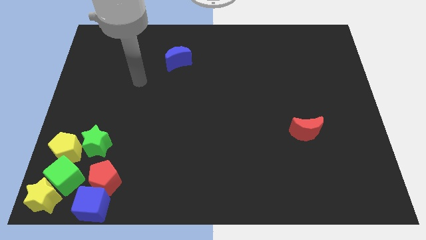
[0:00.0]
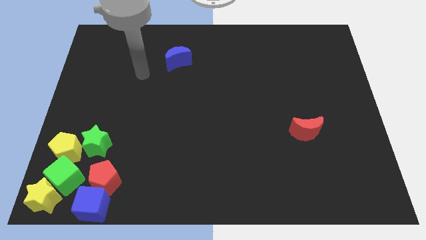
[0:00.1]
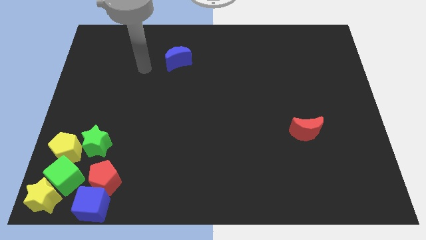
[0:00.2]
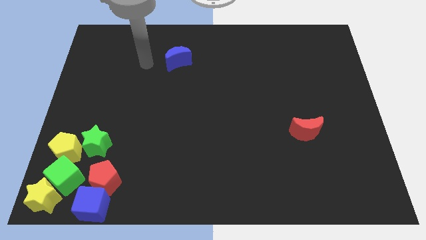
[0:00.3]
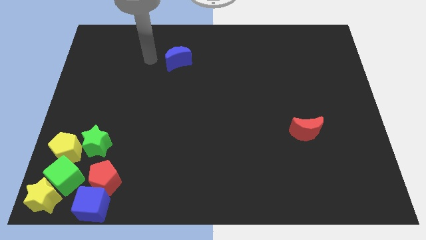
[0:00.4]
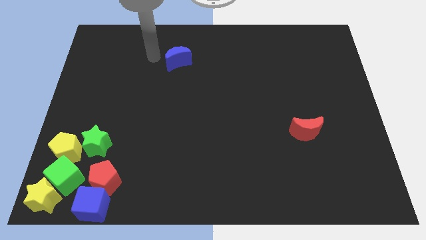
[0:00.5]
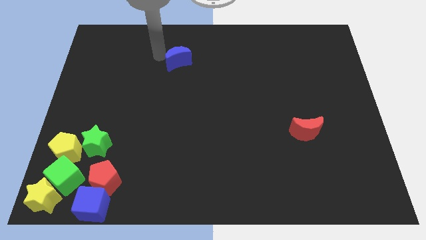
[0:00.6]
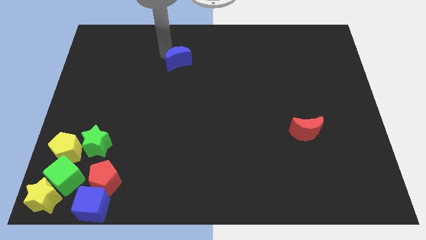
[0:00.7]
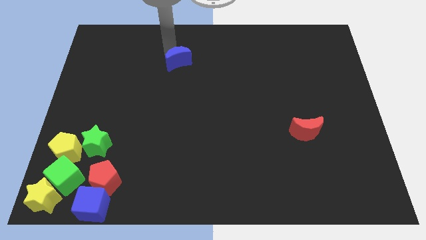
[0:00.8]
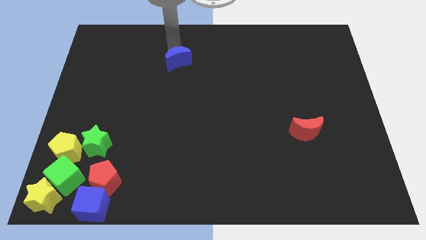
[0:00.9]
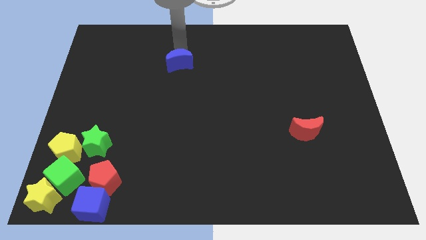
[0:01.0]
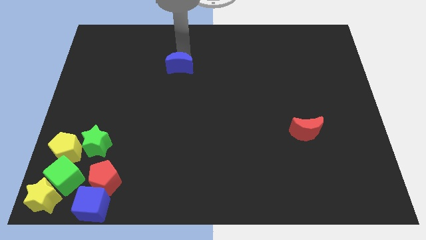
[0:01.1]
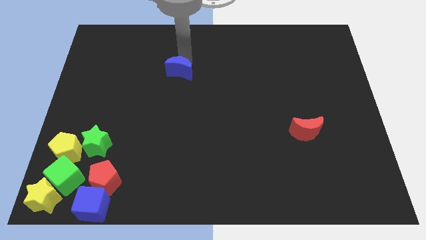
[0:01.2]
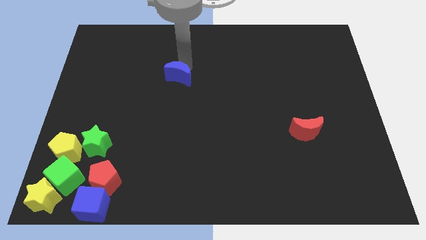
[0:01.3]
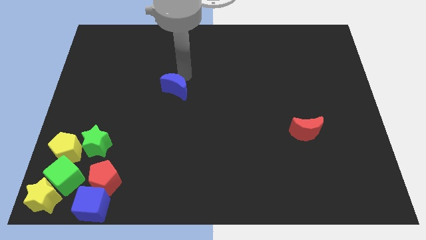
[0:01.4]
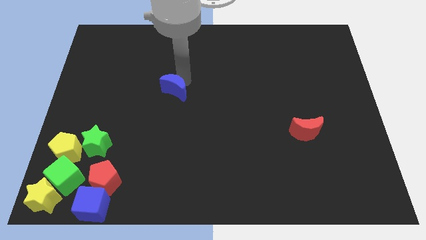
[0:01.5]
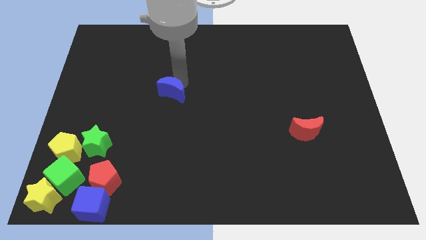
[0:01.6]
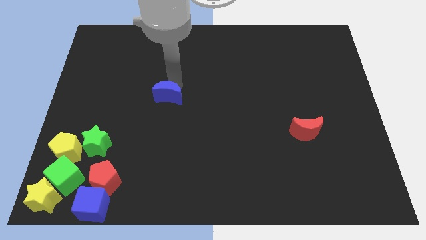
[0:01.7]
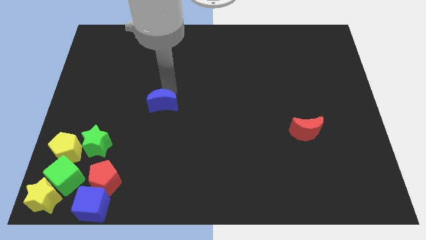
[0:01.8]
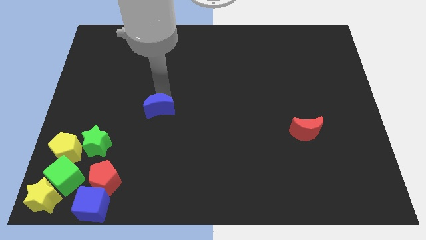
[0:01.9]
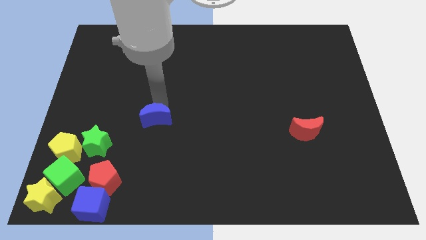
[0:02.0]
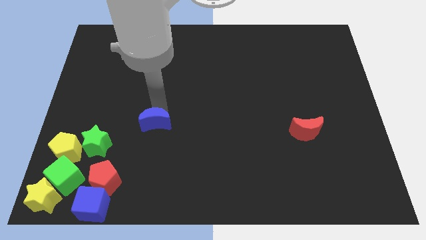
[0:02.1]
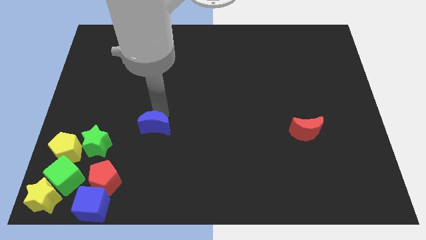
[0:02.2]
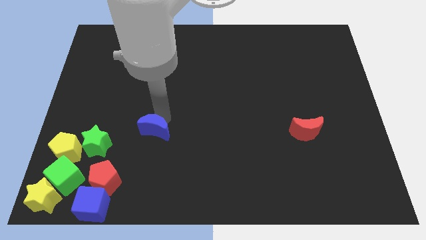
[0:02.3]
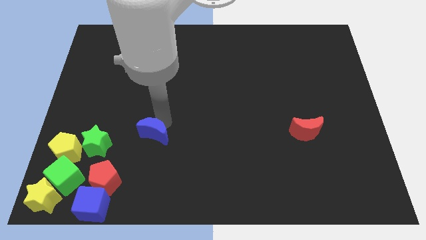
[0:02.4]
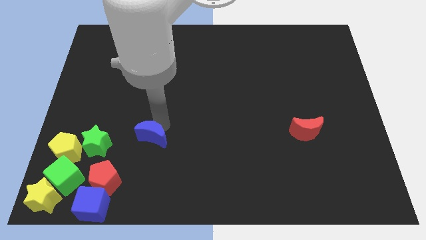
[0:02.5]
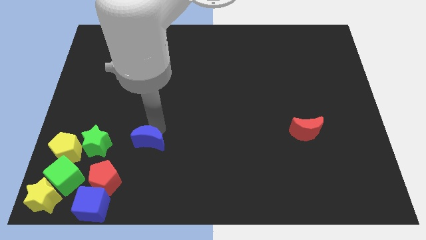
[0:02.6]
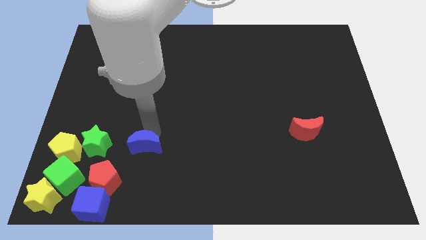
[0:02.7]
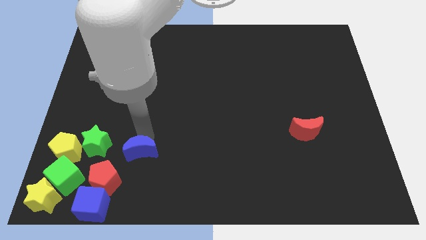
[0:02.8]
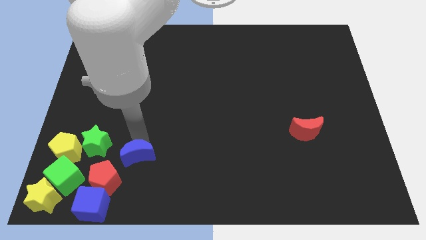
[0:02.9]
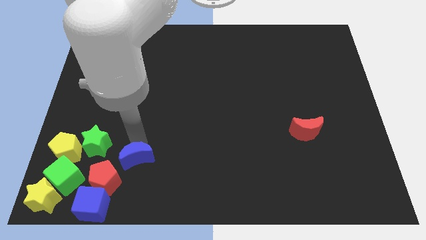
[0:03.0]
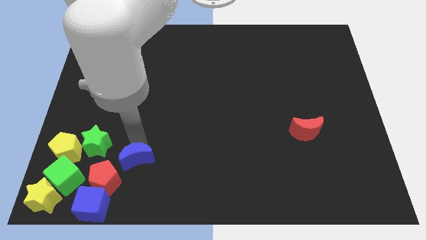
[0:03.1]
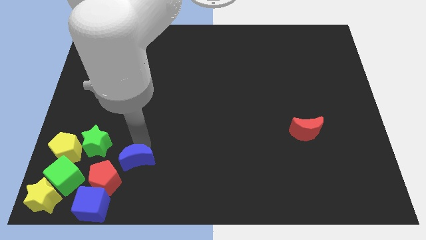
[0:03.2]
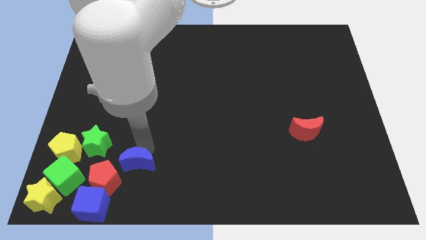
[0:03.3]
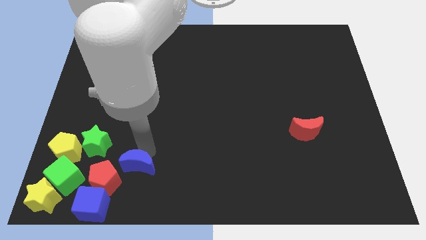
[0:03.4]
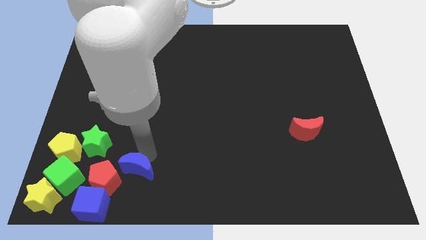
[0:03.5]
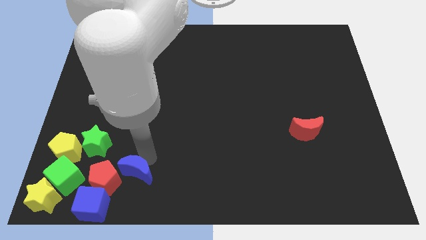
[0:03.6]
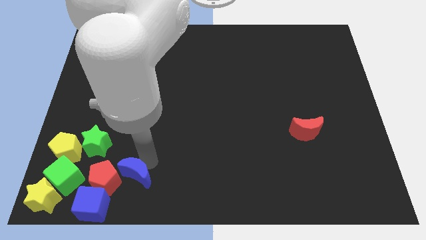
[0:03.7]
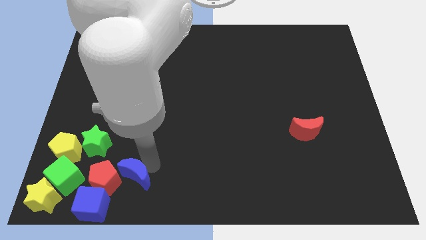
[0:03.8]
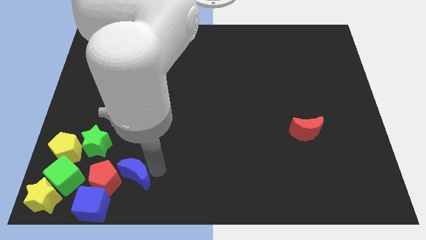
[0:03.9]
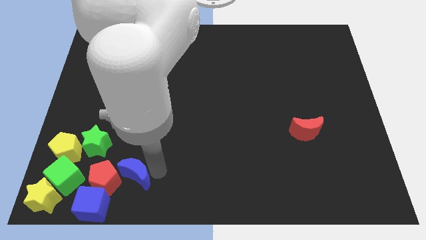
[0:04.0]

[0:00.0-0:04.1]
drag the blue moon to the right of the red penatgon

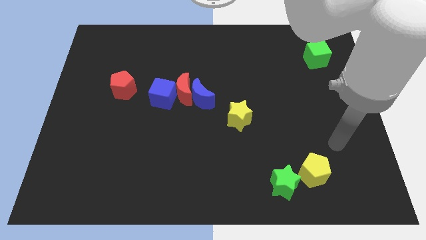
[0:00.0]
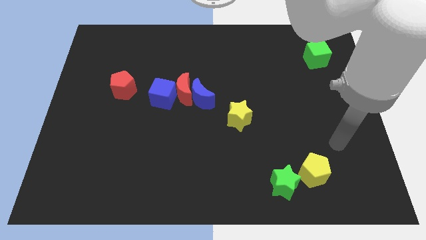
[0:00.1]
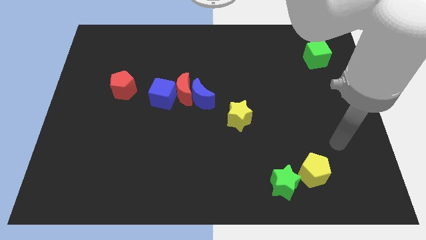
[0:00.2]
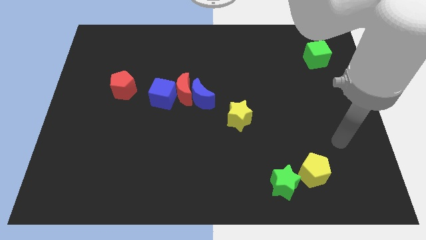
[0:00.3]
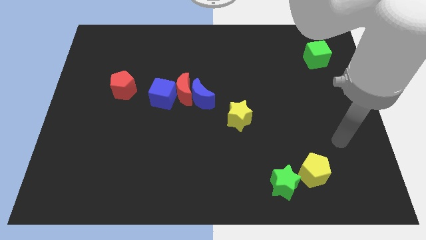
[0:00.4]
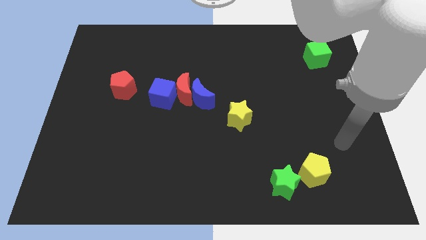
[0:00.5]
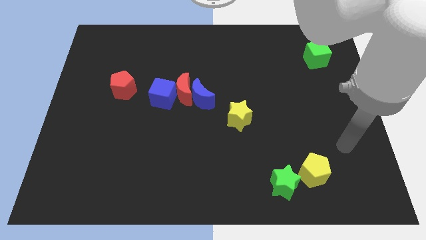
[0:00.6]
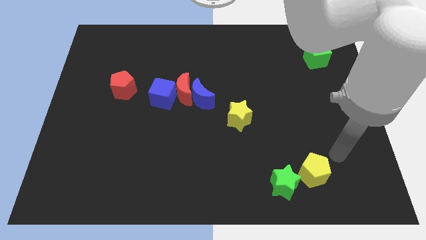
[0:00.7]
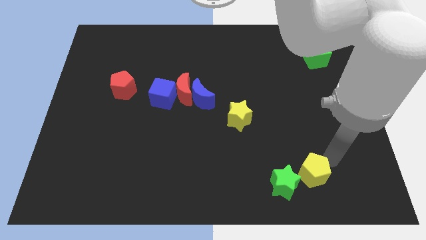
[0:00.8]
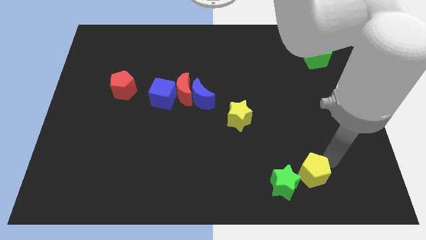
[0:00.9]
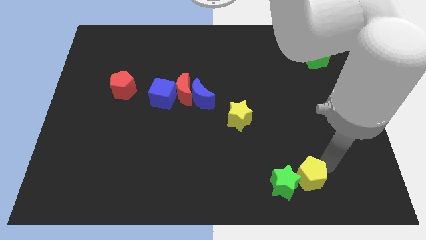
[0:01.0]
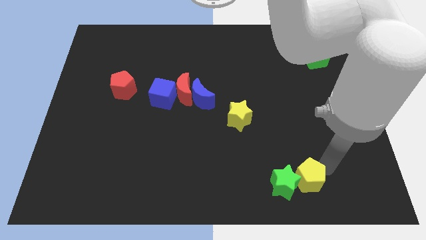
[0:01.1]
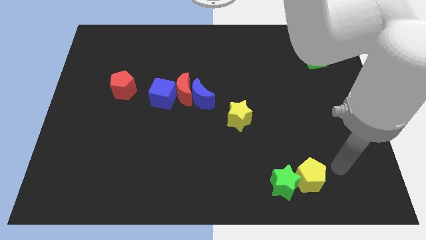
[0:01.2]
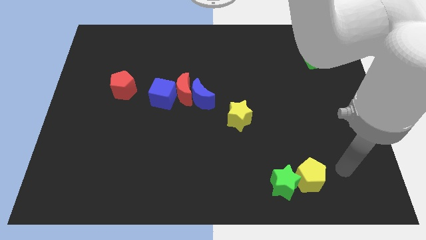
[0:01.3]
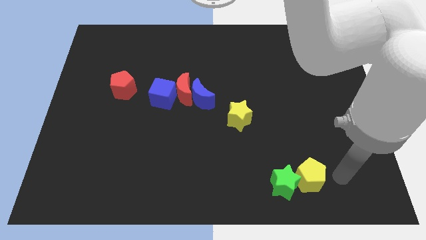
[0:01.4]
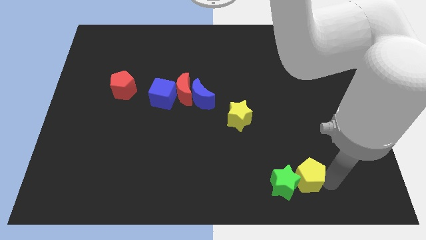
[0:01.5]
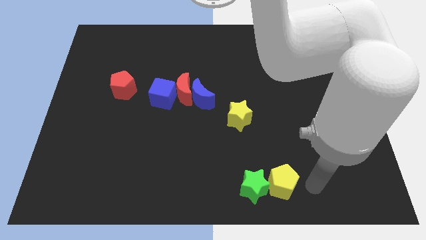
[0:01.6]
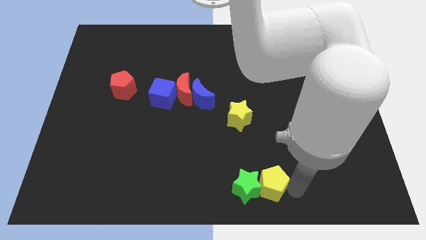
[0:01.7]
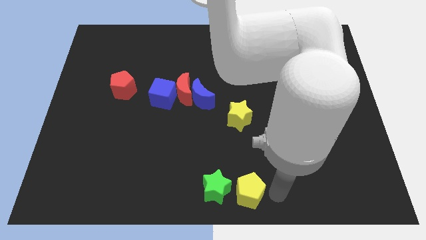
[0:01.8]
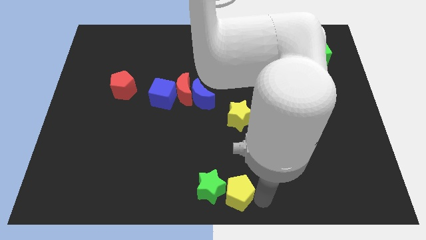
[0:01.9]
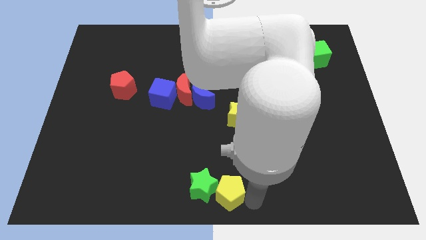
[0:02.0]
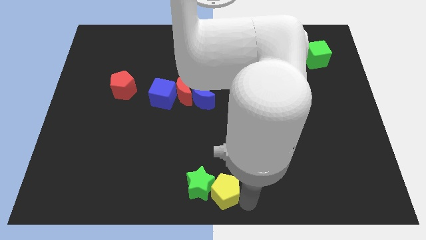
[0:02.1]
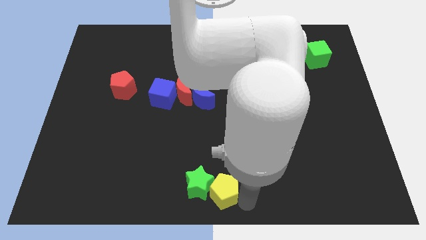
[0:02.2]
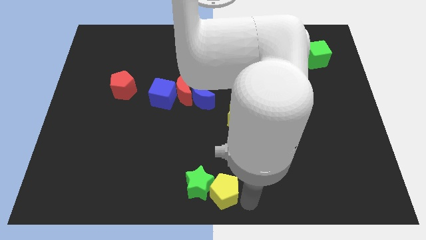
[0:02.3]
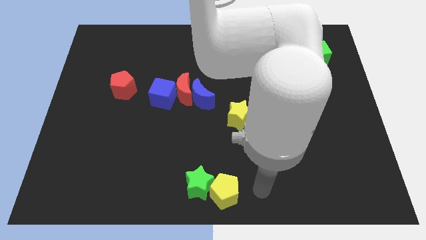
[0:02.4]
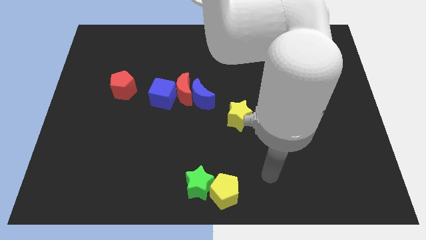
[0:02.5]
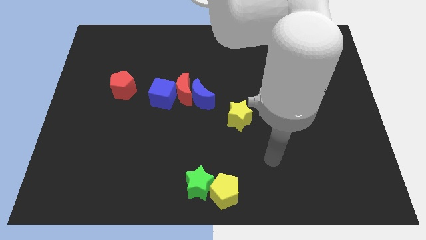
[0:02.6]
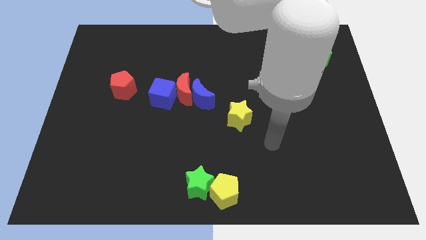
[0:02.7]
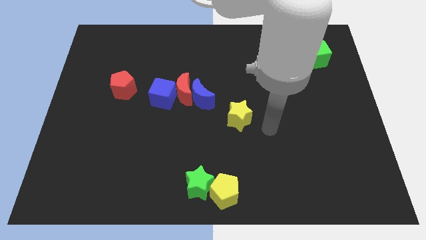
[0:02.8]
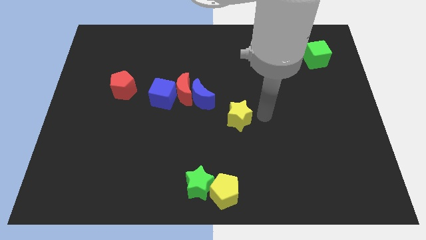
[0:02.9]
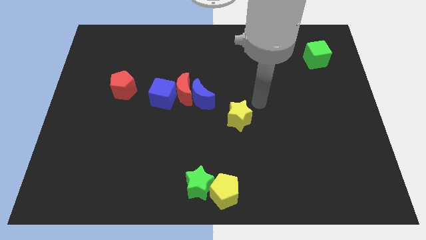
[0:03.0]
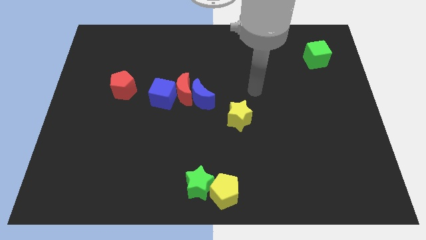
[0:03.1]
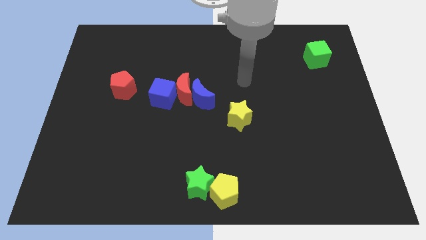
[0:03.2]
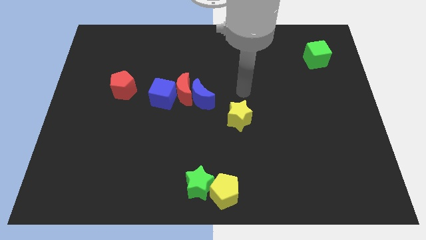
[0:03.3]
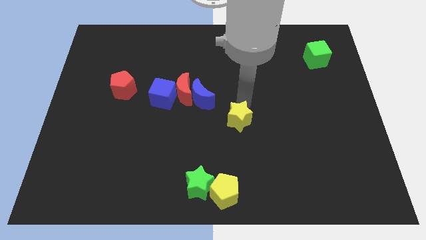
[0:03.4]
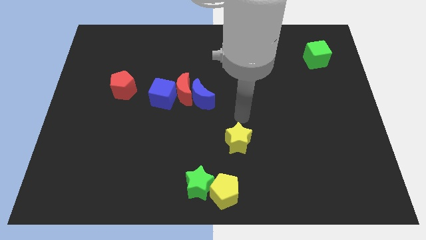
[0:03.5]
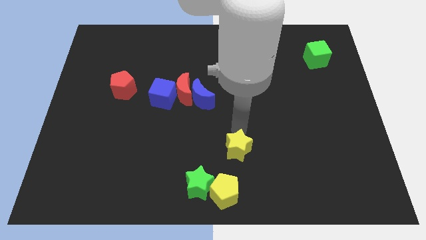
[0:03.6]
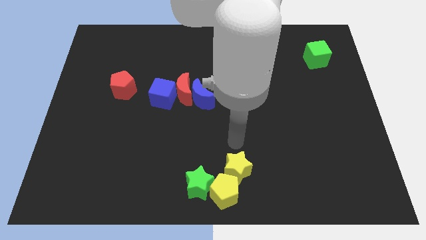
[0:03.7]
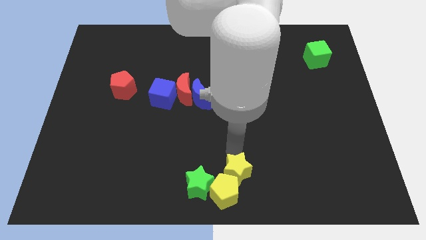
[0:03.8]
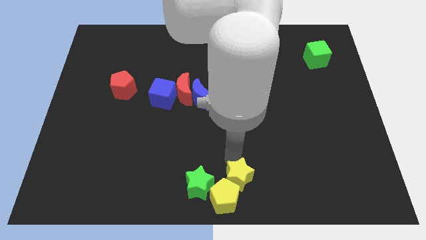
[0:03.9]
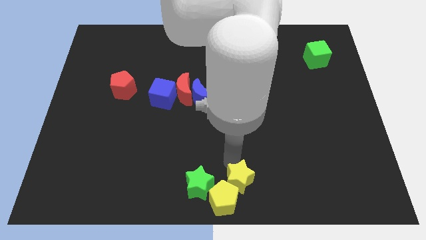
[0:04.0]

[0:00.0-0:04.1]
push the yellow star and pentagon and green star to center bottom of the board

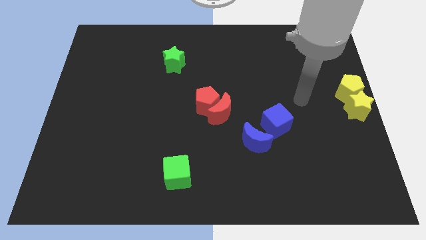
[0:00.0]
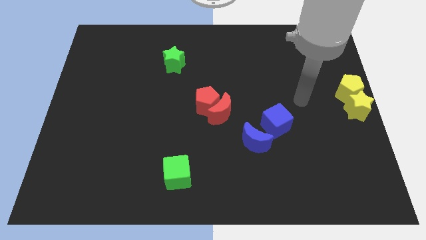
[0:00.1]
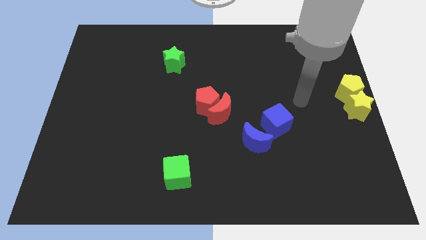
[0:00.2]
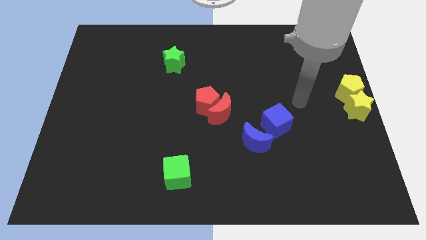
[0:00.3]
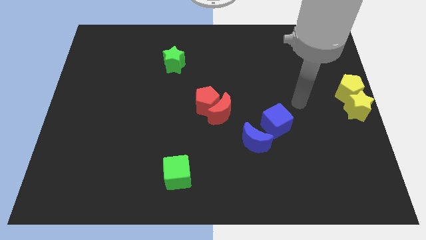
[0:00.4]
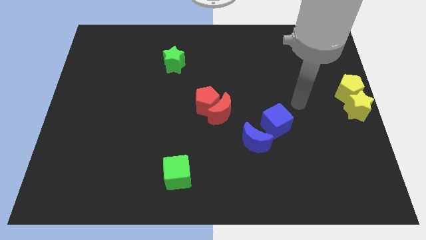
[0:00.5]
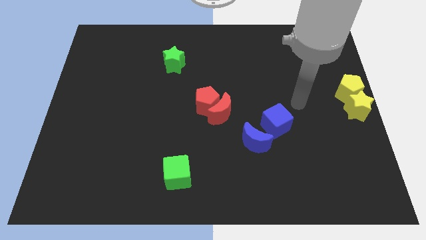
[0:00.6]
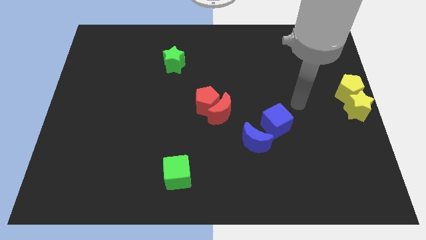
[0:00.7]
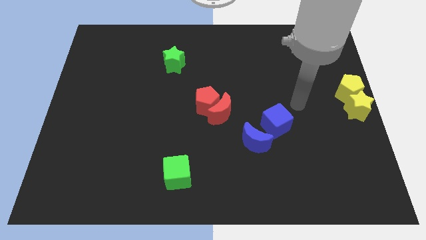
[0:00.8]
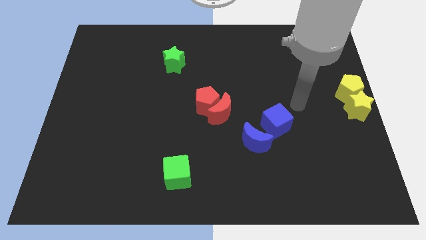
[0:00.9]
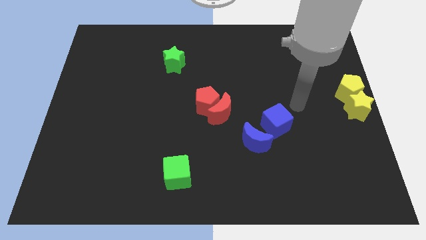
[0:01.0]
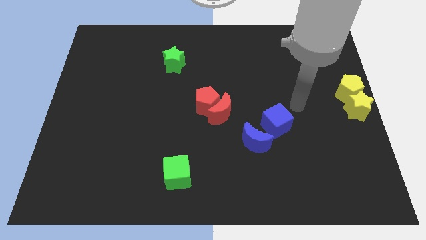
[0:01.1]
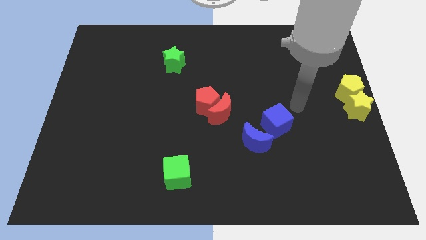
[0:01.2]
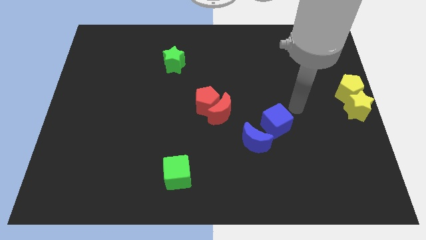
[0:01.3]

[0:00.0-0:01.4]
move the arm to the left of the blue cube
